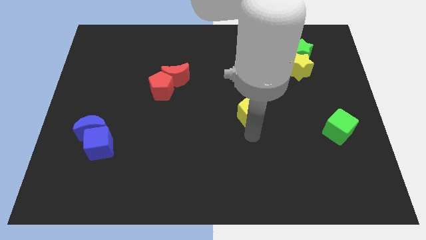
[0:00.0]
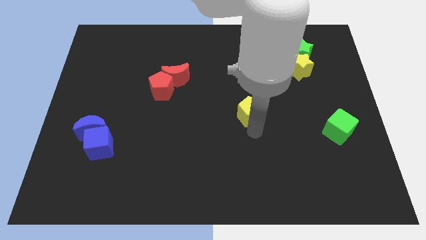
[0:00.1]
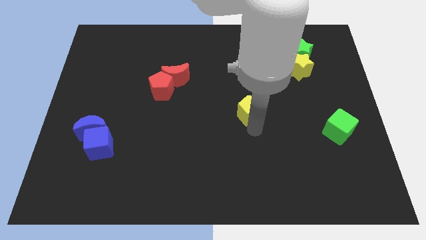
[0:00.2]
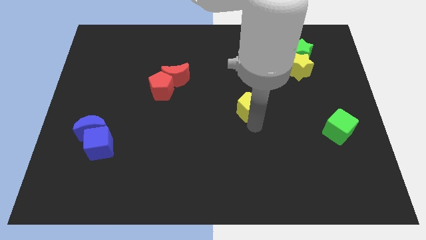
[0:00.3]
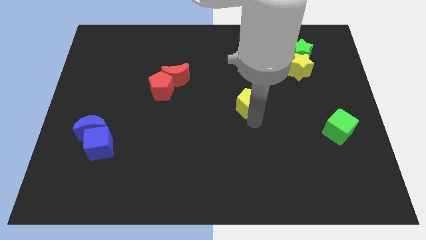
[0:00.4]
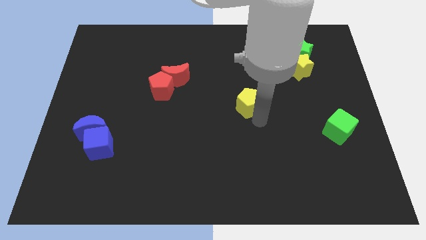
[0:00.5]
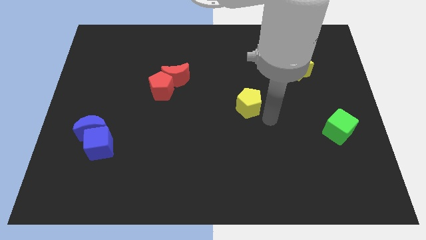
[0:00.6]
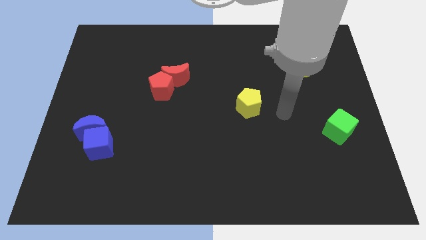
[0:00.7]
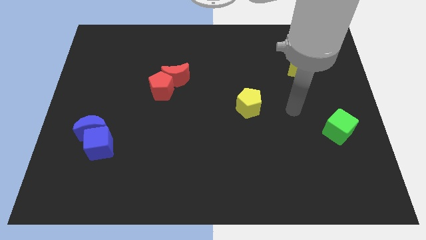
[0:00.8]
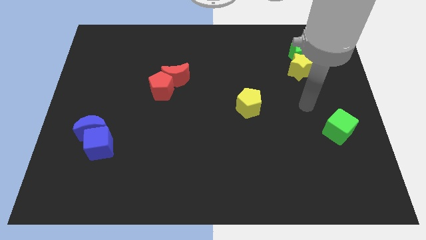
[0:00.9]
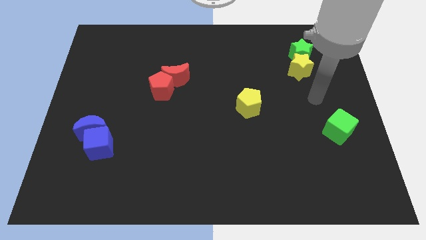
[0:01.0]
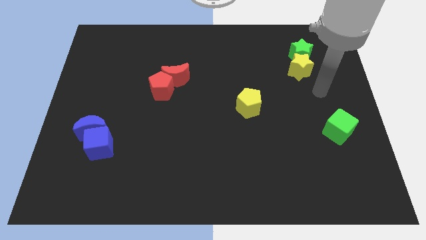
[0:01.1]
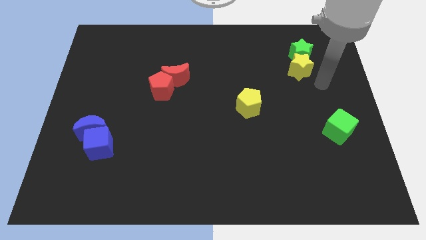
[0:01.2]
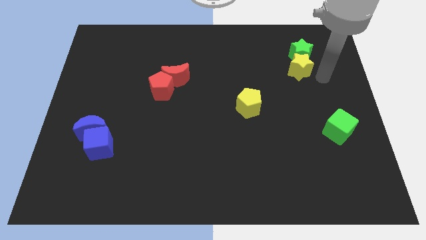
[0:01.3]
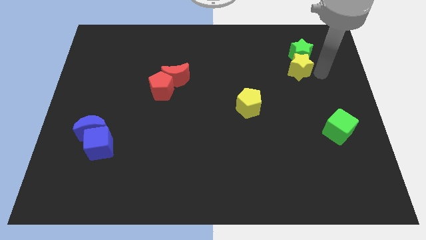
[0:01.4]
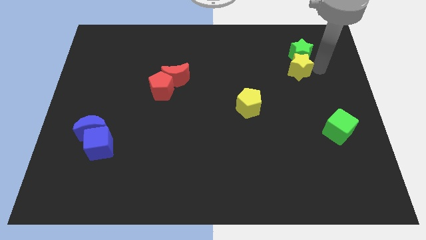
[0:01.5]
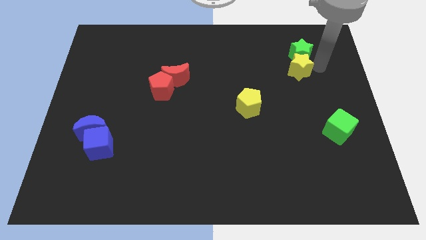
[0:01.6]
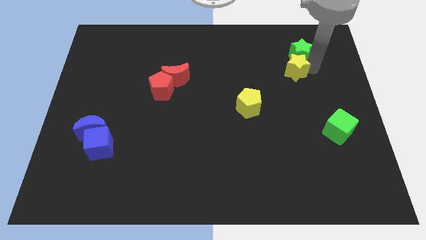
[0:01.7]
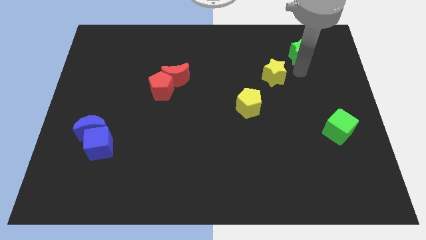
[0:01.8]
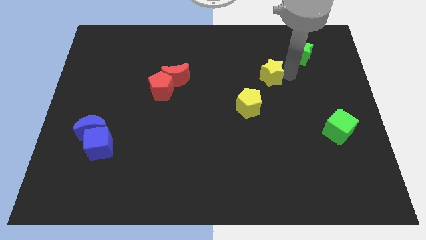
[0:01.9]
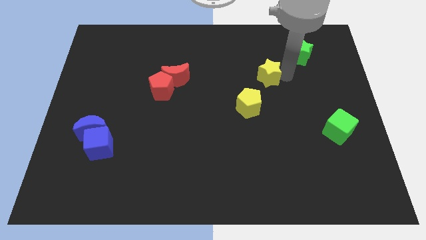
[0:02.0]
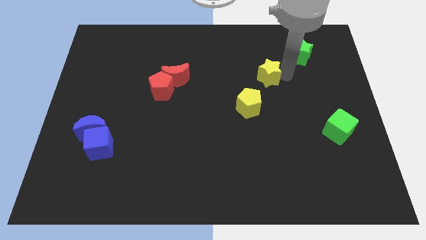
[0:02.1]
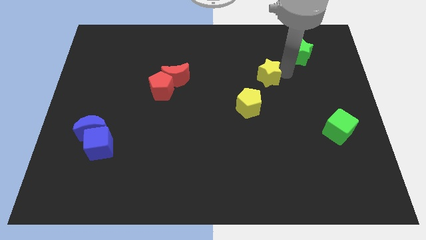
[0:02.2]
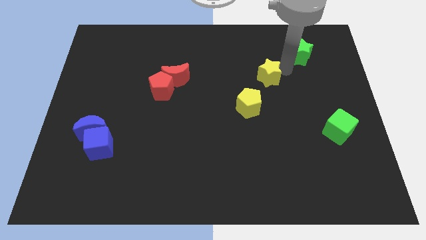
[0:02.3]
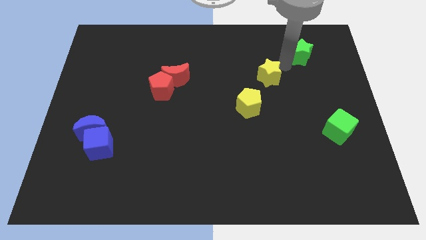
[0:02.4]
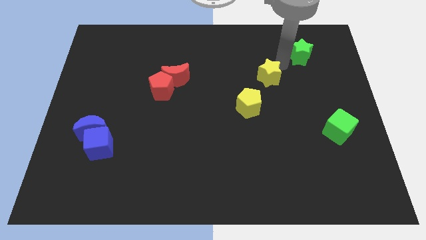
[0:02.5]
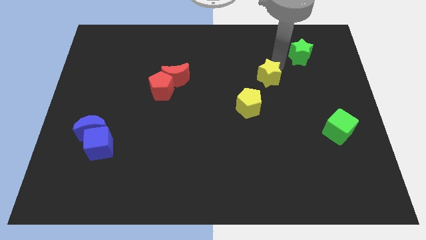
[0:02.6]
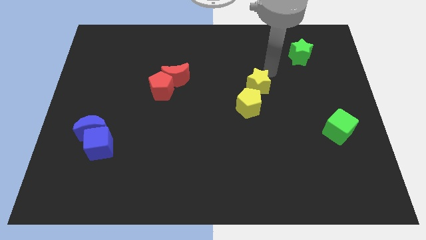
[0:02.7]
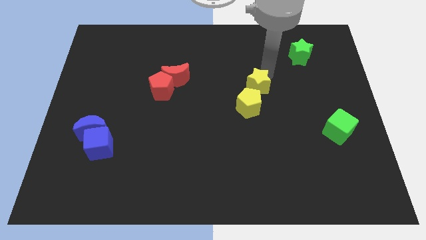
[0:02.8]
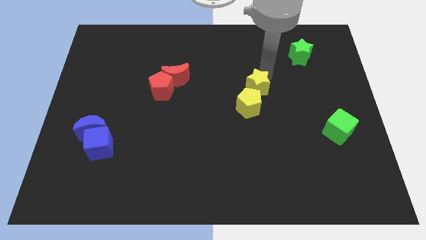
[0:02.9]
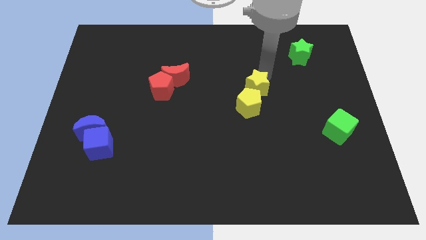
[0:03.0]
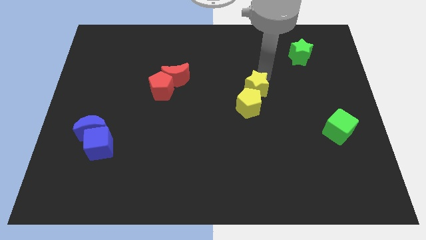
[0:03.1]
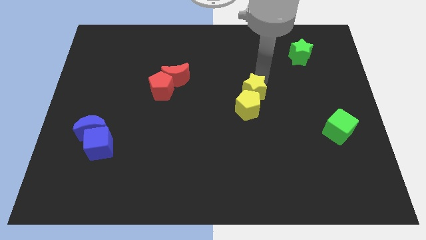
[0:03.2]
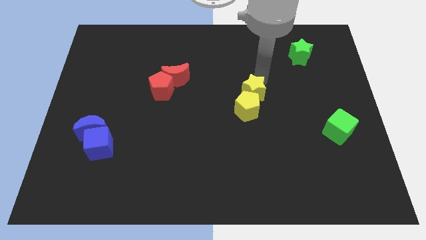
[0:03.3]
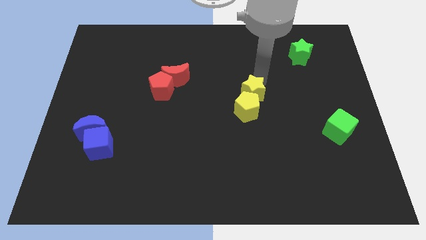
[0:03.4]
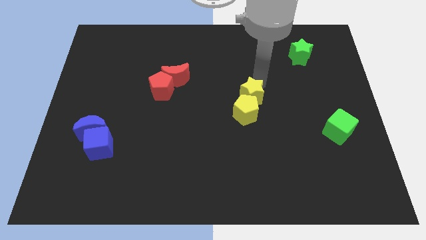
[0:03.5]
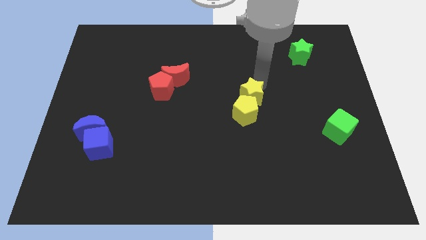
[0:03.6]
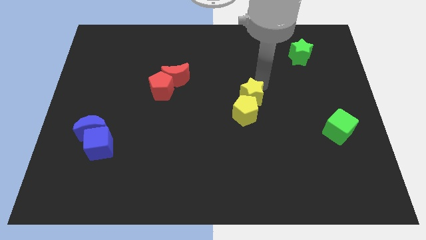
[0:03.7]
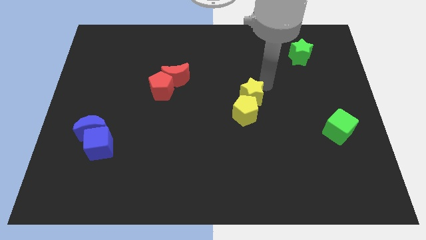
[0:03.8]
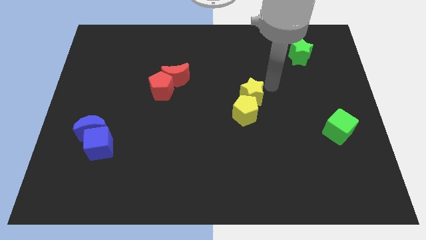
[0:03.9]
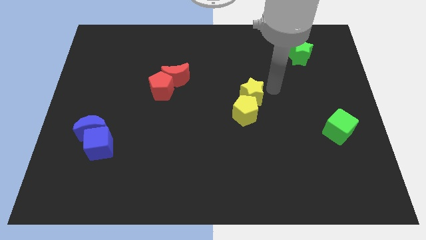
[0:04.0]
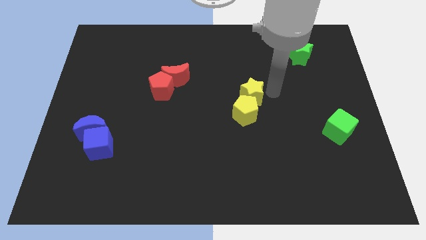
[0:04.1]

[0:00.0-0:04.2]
place yellow star above the yellow pentagon

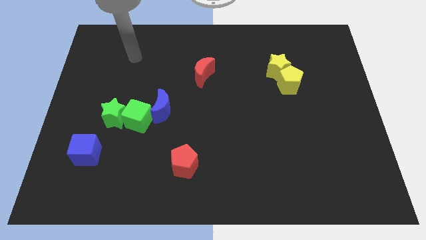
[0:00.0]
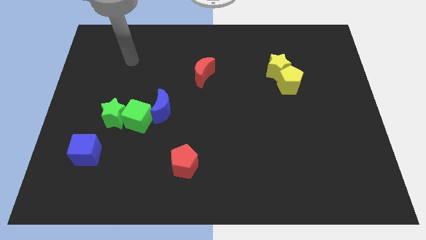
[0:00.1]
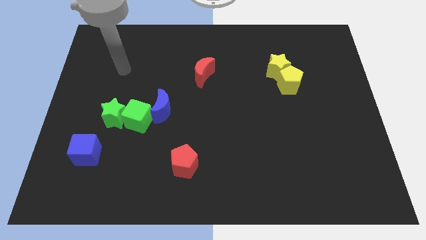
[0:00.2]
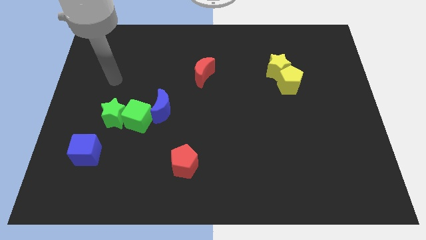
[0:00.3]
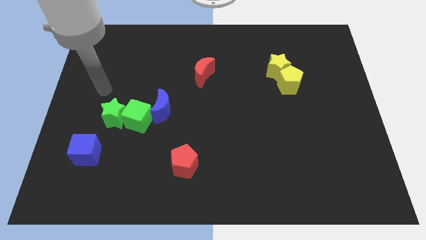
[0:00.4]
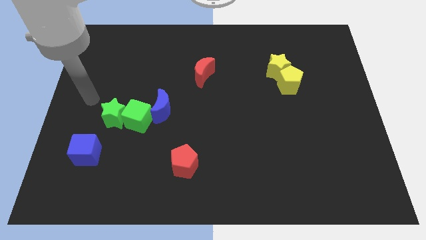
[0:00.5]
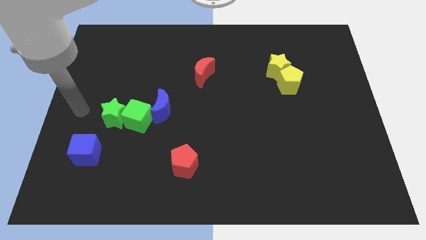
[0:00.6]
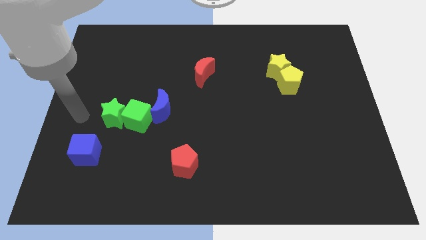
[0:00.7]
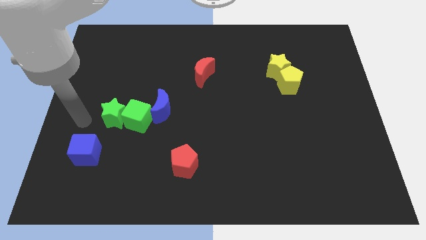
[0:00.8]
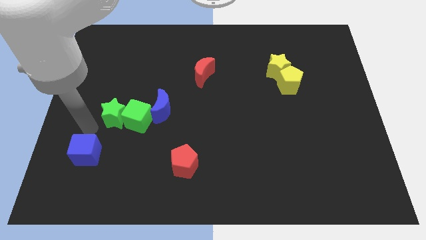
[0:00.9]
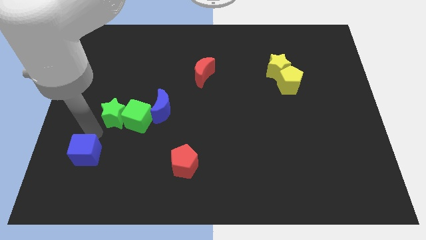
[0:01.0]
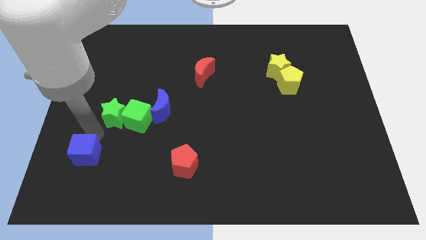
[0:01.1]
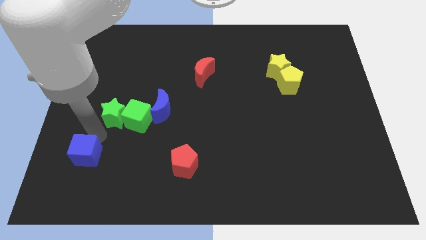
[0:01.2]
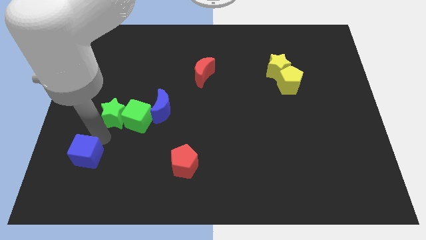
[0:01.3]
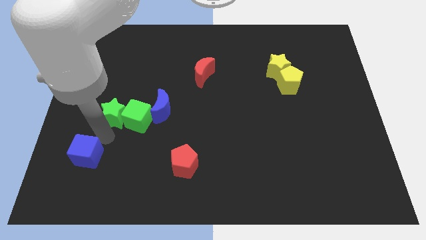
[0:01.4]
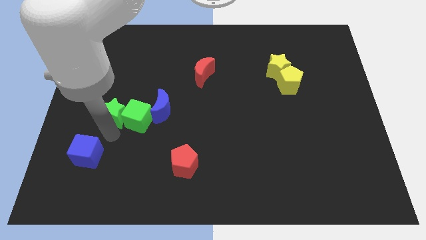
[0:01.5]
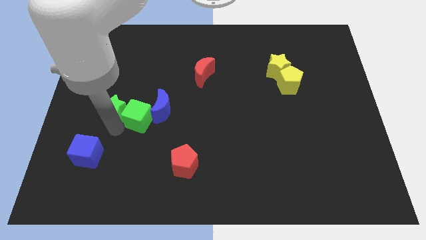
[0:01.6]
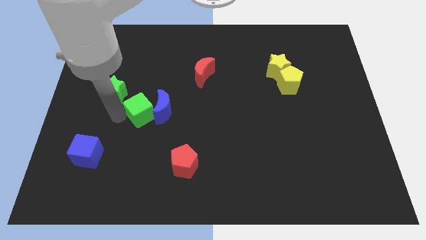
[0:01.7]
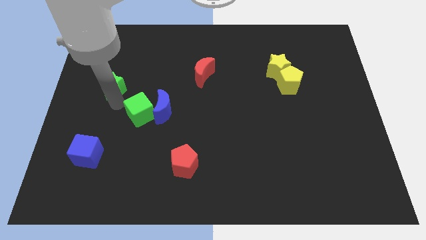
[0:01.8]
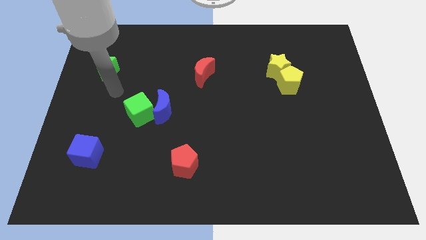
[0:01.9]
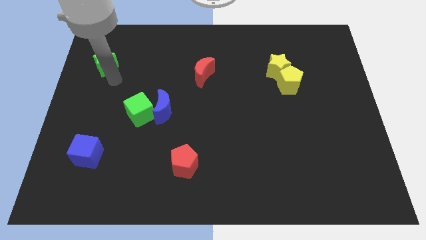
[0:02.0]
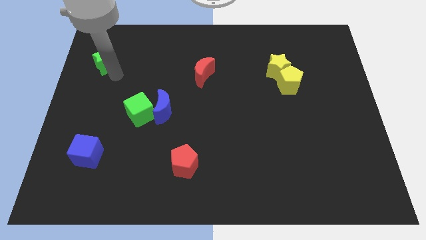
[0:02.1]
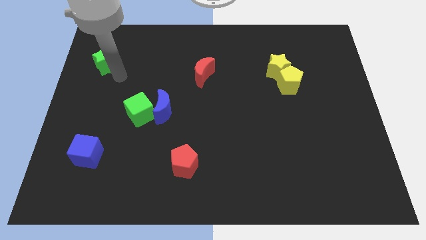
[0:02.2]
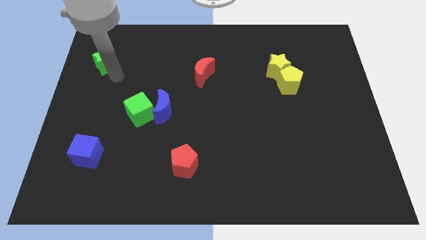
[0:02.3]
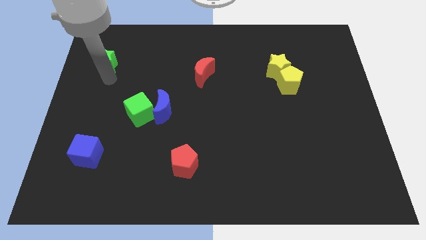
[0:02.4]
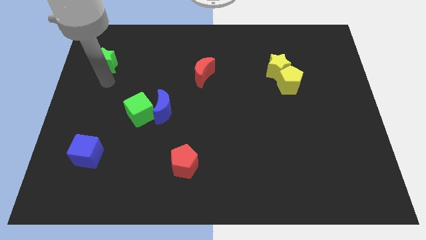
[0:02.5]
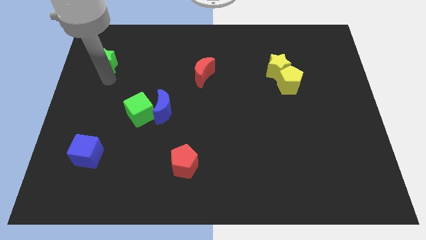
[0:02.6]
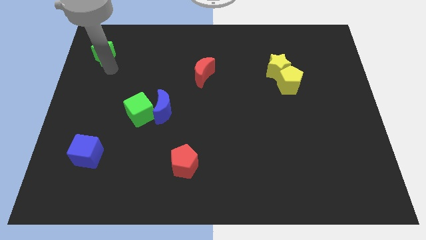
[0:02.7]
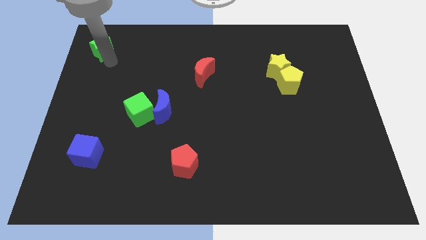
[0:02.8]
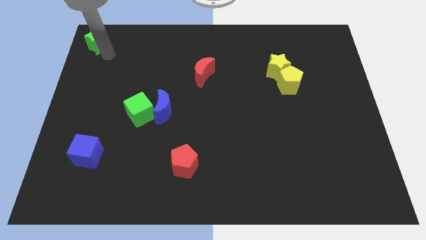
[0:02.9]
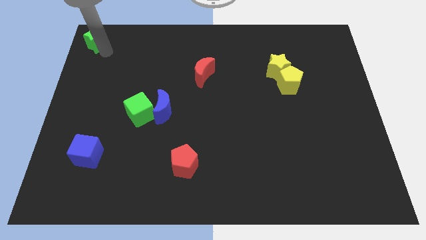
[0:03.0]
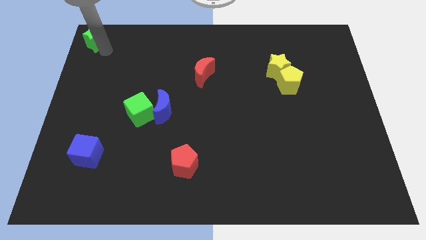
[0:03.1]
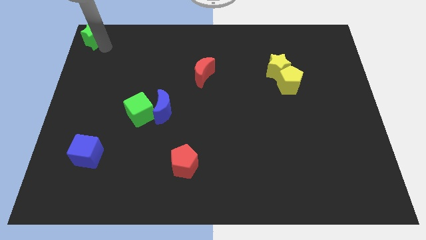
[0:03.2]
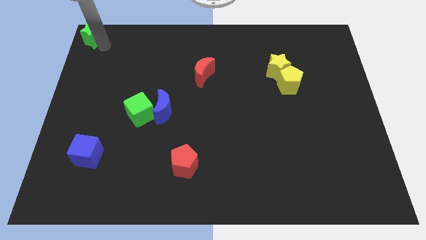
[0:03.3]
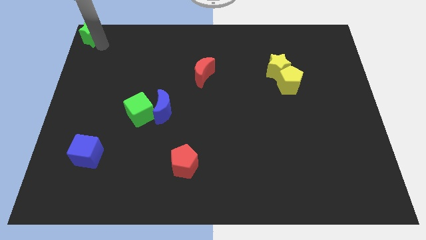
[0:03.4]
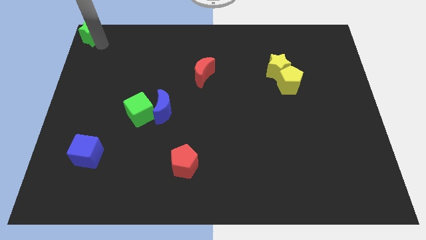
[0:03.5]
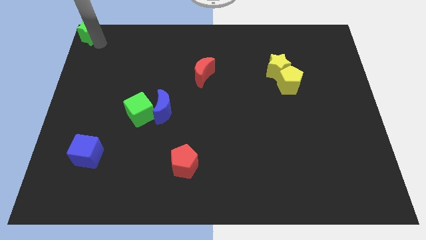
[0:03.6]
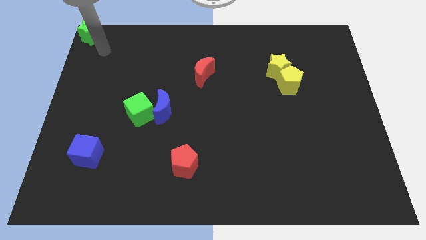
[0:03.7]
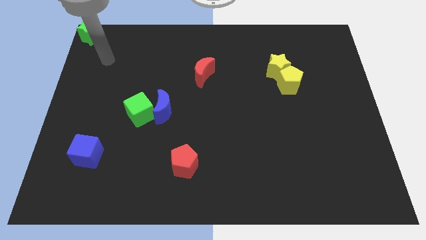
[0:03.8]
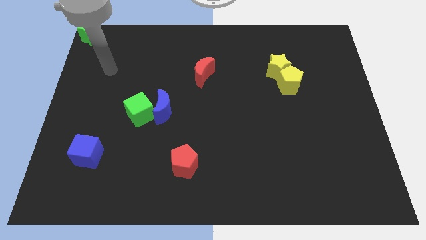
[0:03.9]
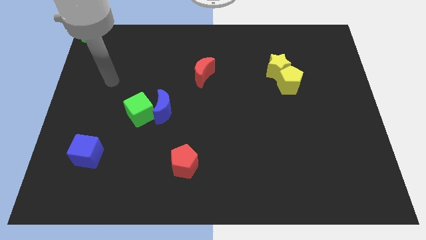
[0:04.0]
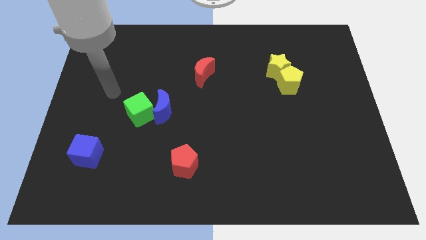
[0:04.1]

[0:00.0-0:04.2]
separate the green star from the group of object

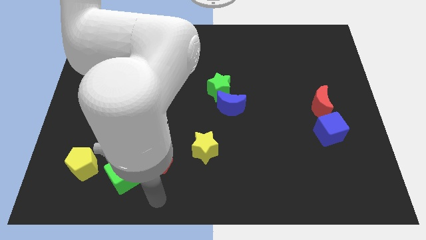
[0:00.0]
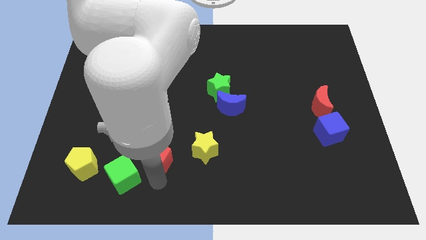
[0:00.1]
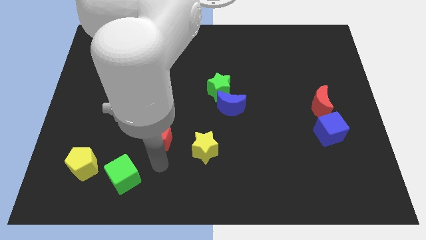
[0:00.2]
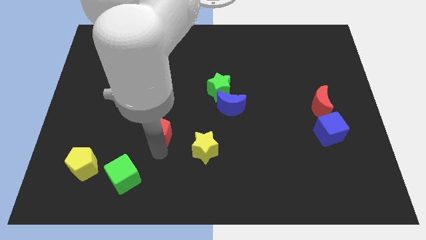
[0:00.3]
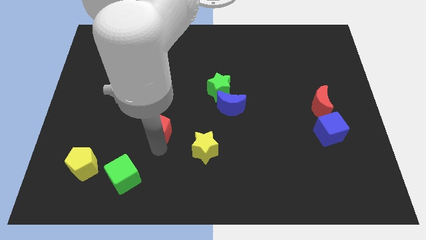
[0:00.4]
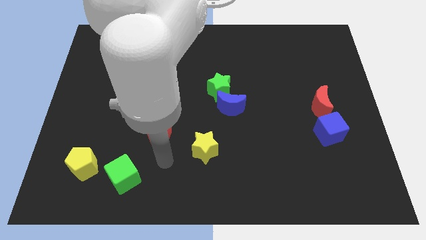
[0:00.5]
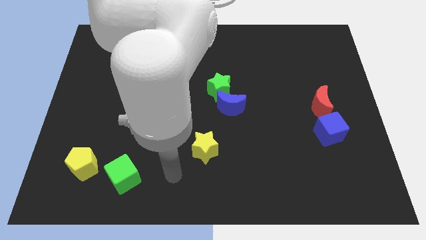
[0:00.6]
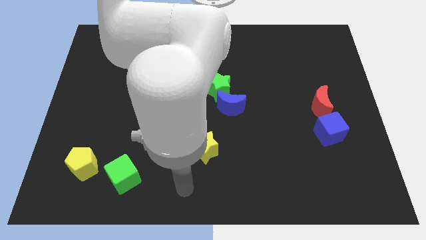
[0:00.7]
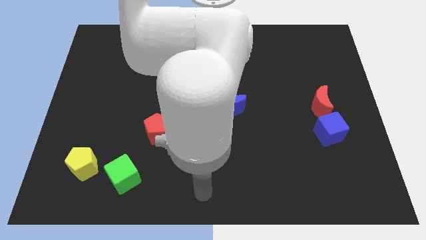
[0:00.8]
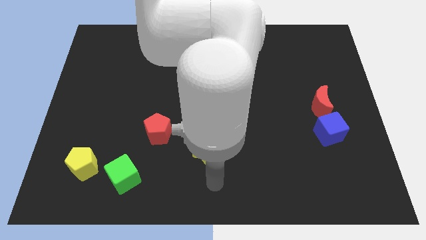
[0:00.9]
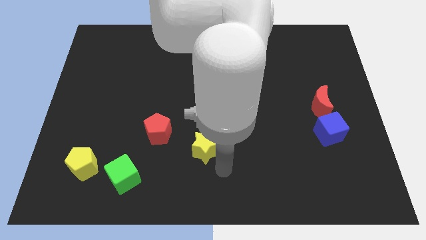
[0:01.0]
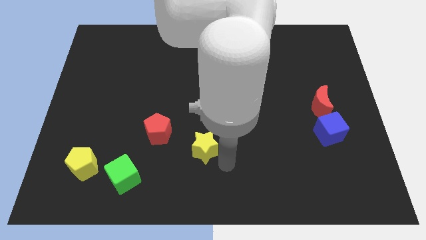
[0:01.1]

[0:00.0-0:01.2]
move the red pentagon to the left of the yellow star
